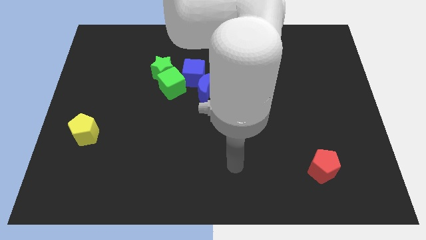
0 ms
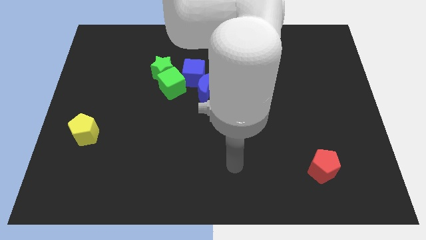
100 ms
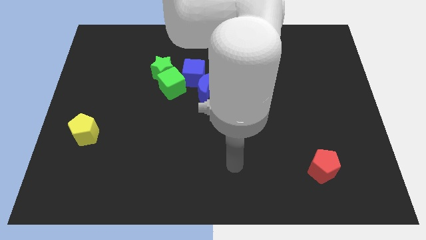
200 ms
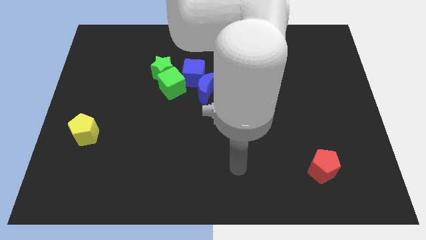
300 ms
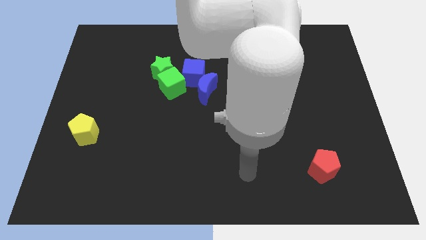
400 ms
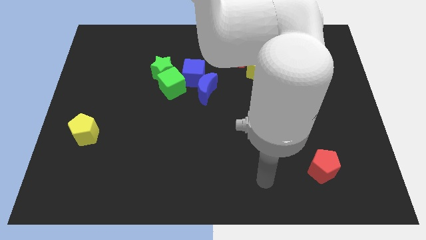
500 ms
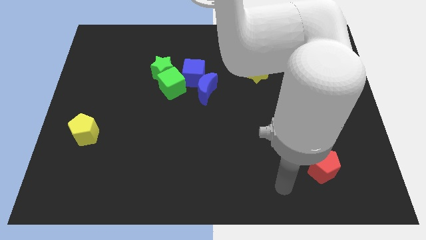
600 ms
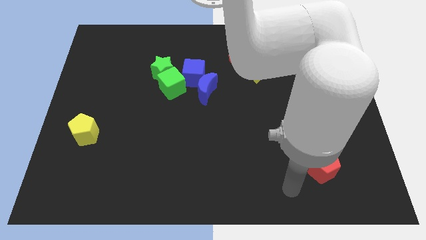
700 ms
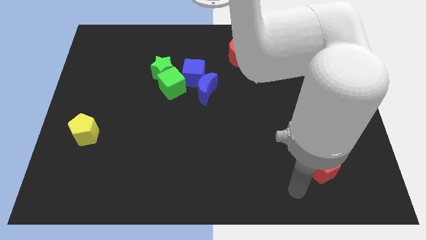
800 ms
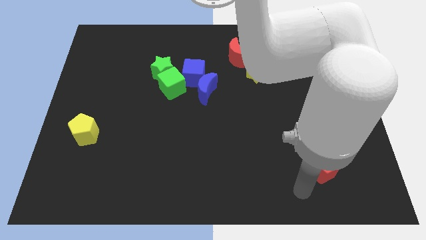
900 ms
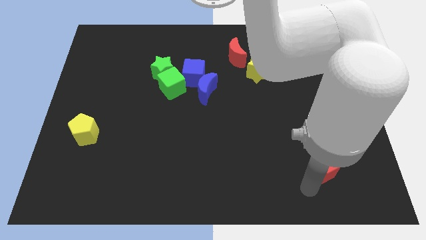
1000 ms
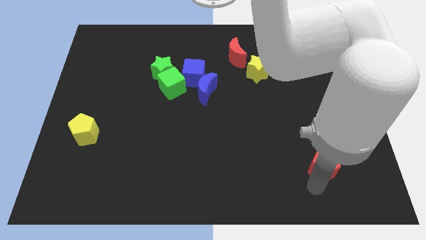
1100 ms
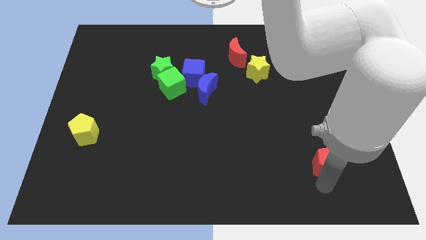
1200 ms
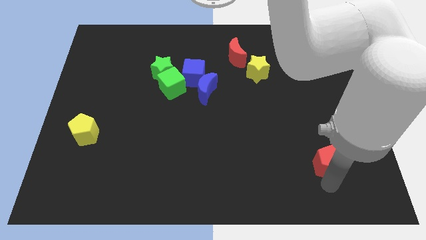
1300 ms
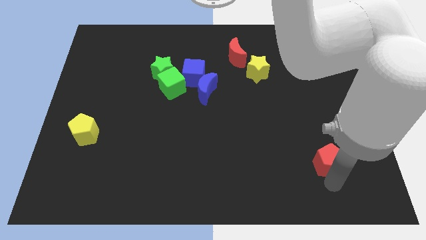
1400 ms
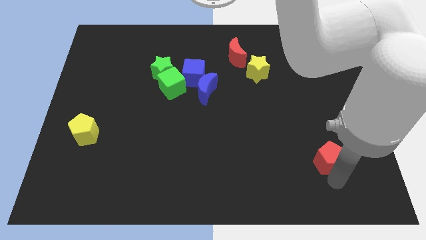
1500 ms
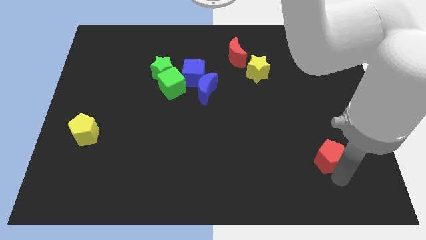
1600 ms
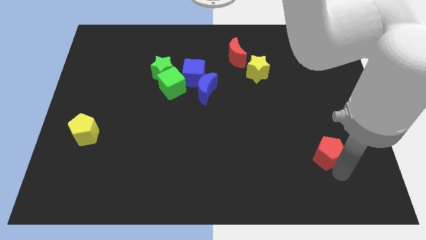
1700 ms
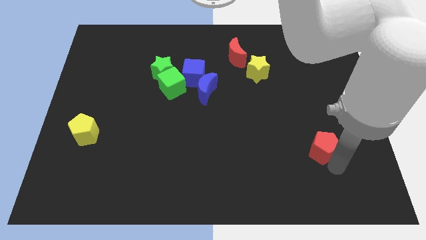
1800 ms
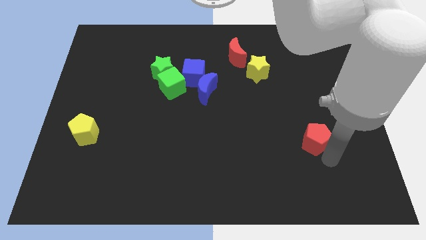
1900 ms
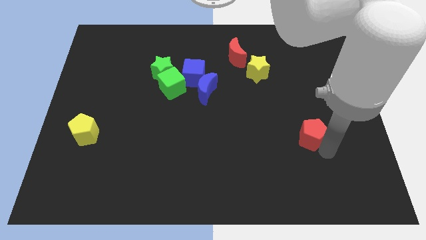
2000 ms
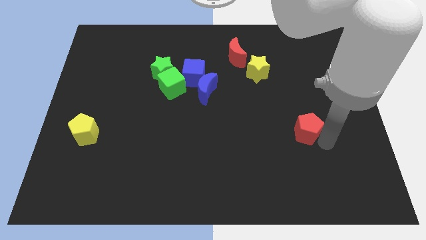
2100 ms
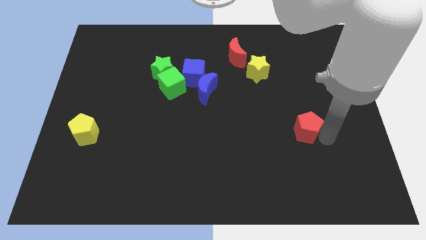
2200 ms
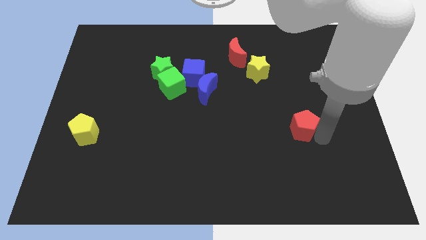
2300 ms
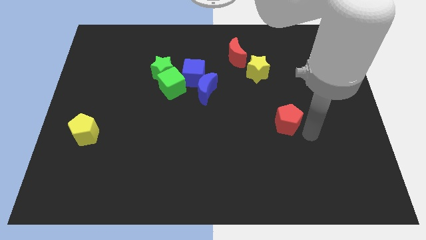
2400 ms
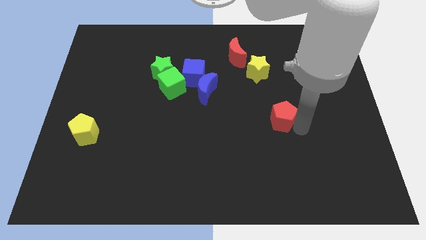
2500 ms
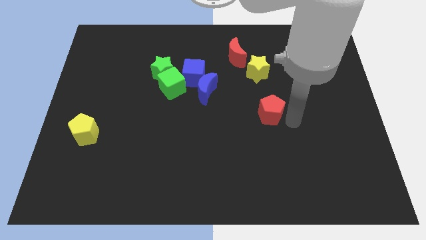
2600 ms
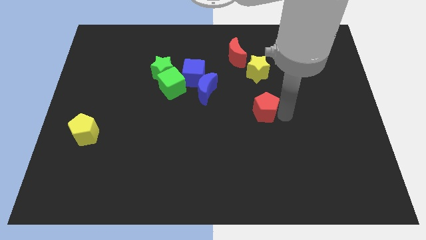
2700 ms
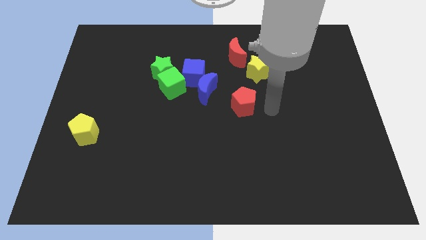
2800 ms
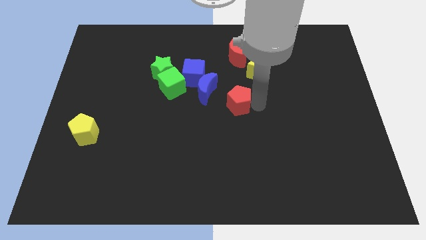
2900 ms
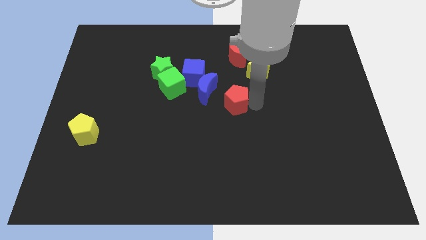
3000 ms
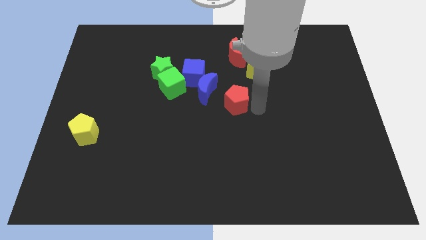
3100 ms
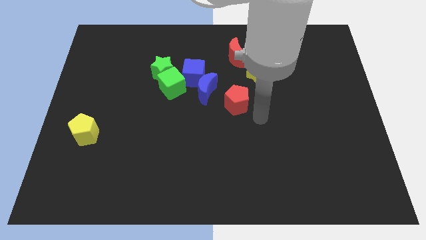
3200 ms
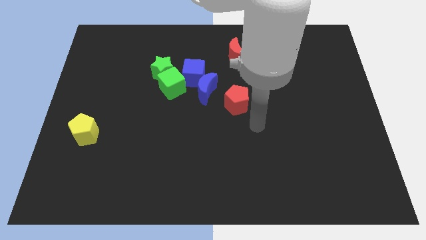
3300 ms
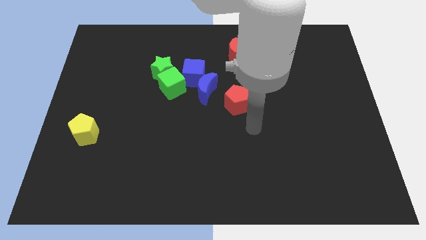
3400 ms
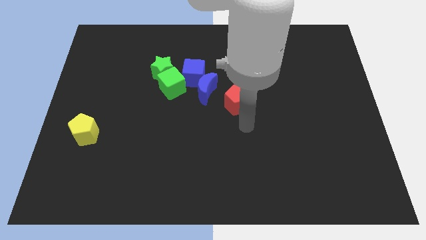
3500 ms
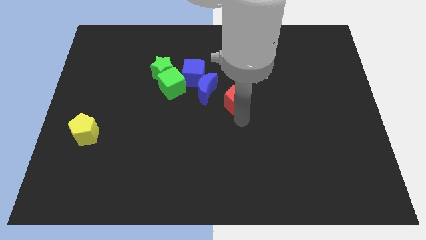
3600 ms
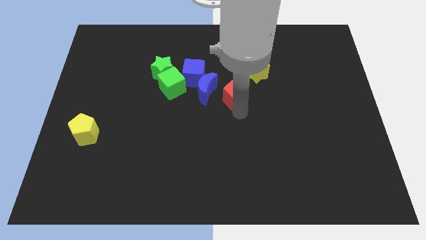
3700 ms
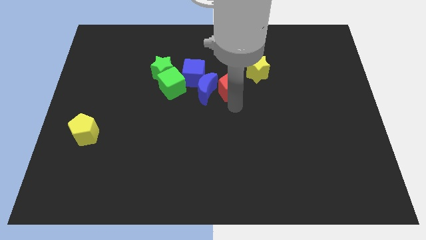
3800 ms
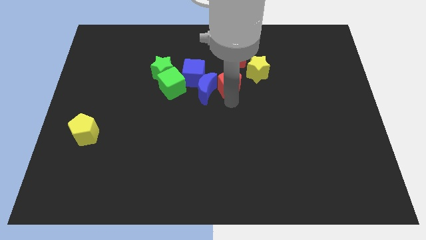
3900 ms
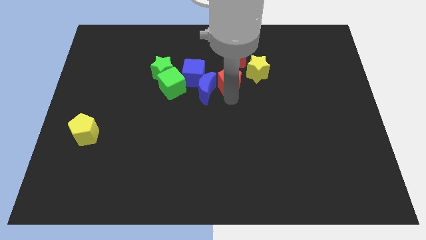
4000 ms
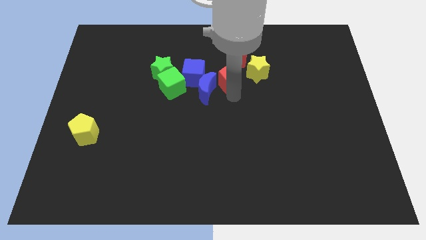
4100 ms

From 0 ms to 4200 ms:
move red pentagon into blue moon

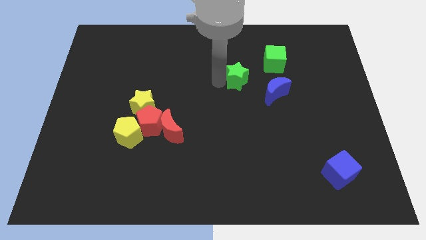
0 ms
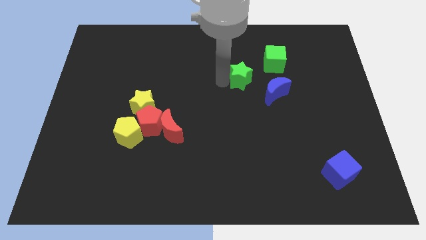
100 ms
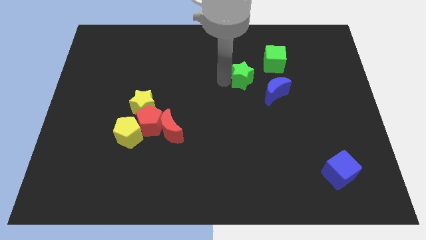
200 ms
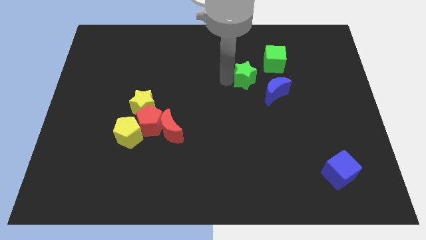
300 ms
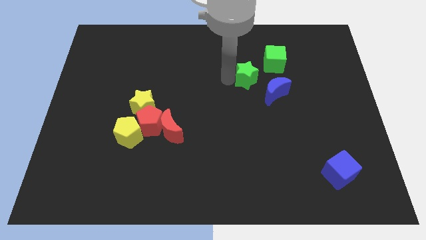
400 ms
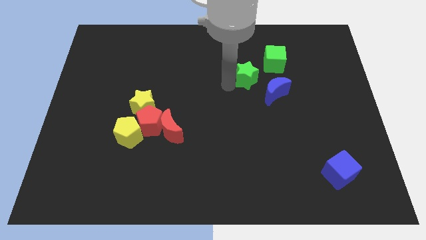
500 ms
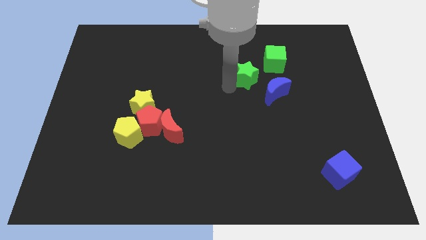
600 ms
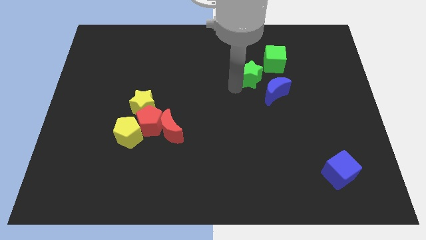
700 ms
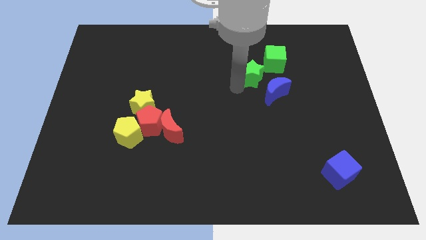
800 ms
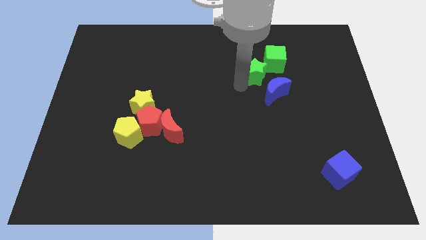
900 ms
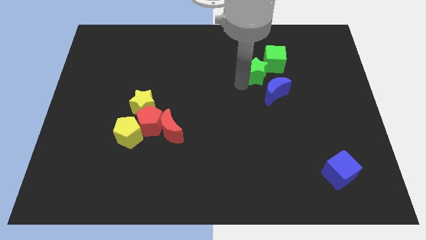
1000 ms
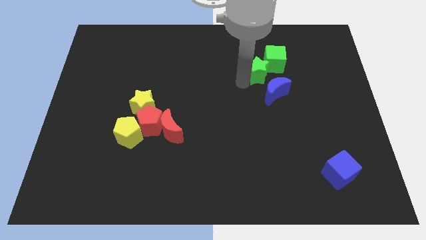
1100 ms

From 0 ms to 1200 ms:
push green star into the green cube

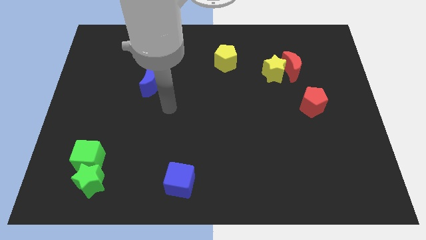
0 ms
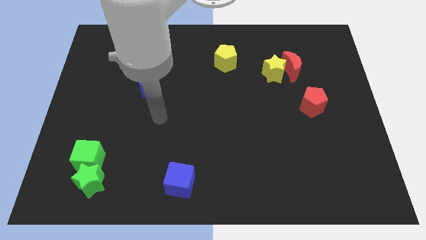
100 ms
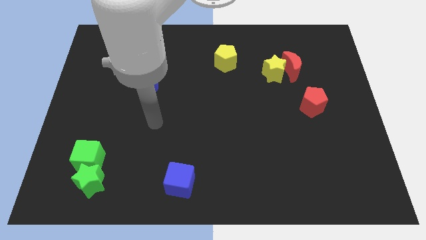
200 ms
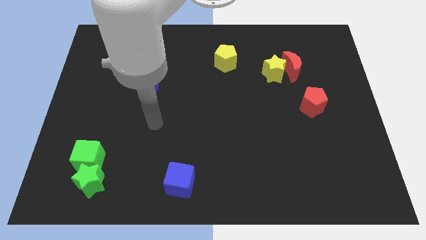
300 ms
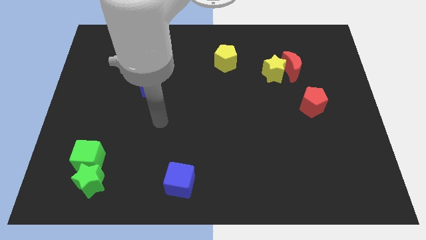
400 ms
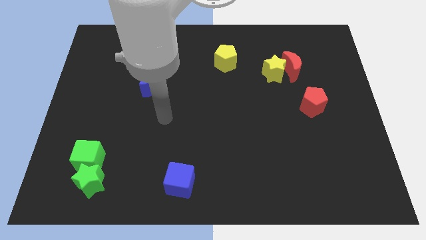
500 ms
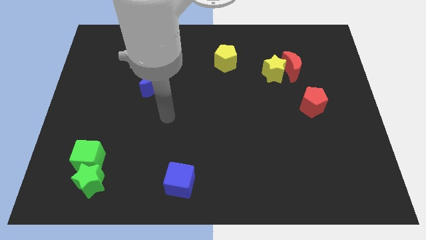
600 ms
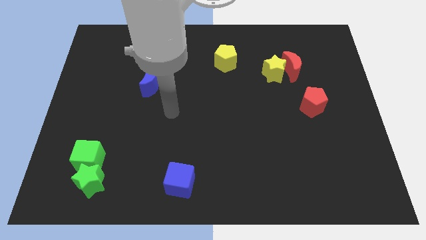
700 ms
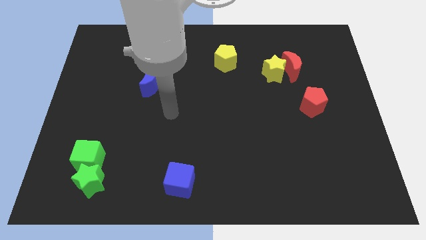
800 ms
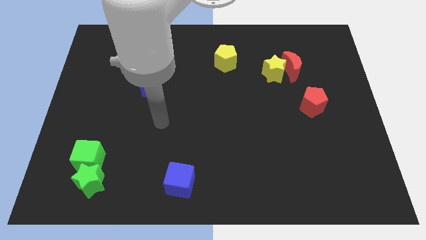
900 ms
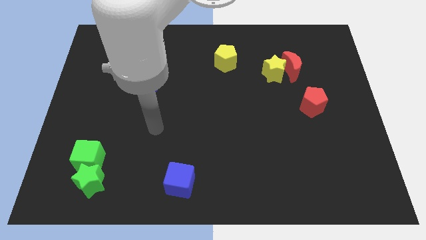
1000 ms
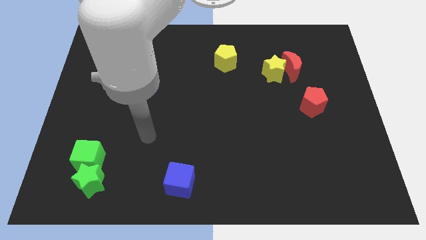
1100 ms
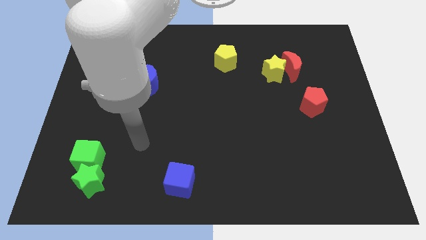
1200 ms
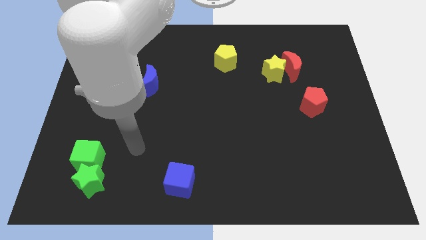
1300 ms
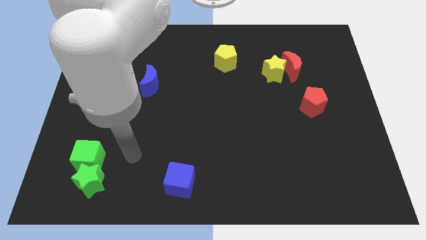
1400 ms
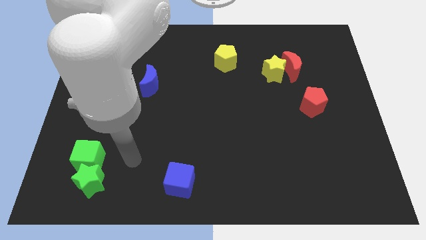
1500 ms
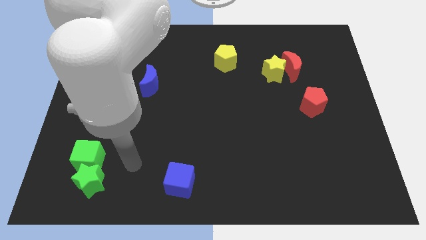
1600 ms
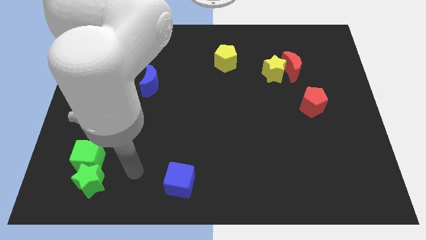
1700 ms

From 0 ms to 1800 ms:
place your arm in between the green cube and blue cube

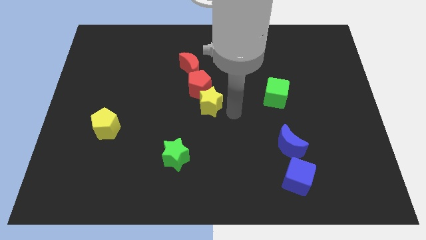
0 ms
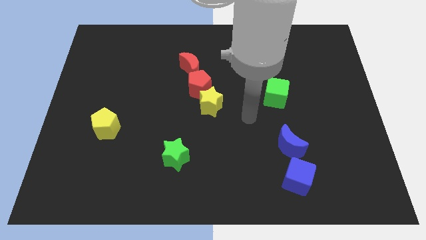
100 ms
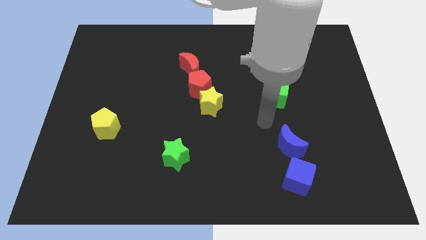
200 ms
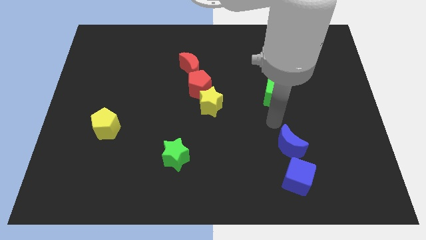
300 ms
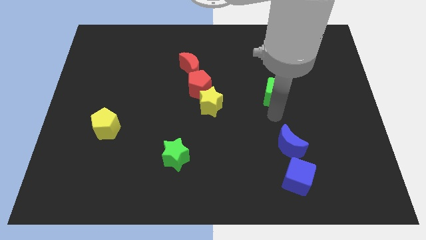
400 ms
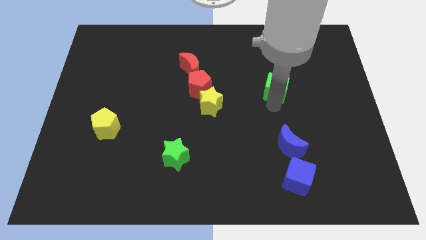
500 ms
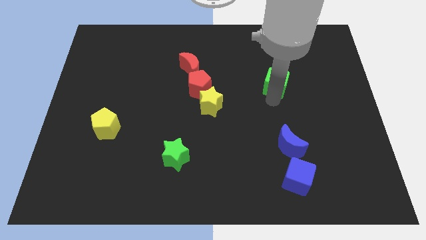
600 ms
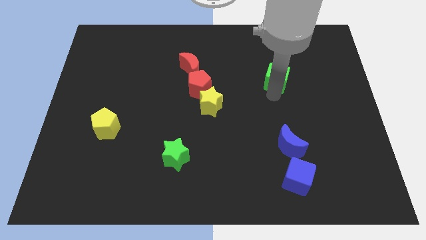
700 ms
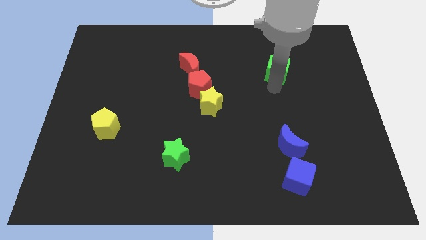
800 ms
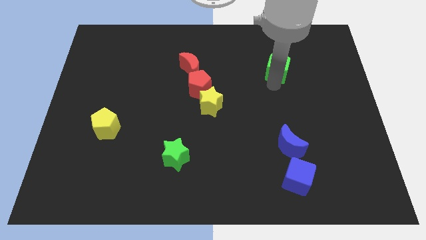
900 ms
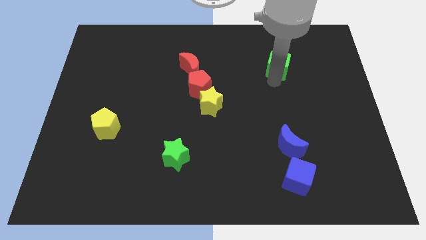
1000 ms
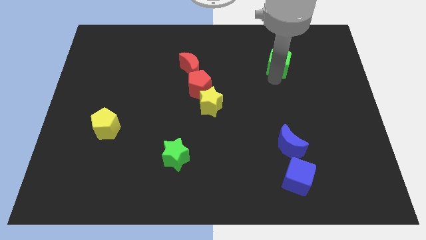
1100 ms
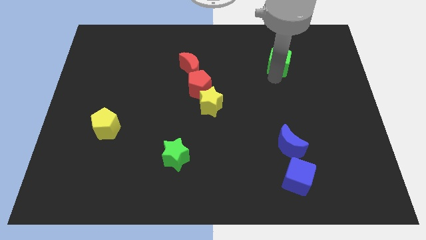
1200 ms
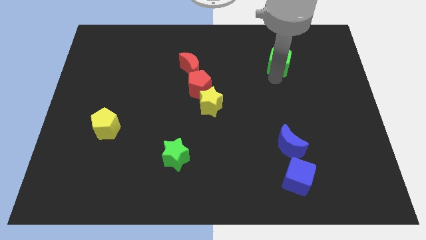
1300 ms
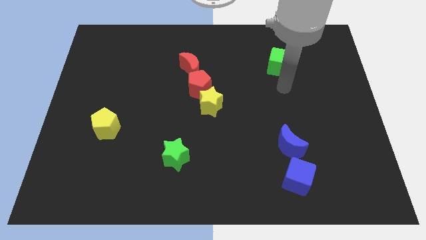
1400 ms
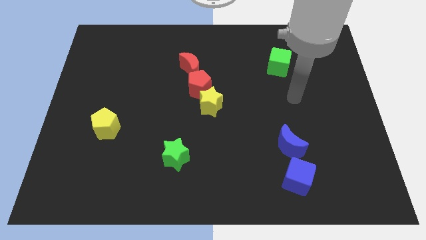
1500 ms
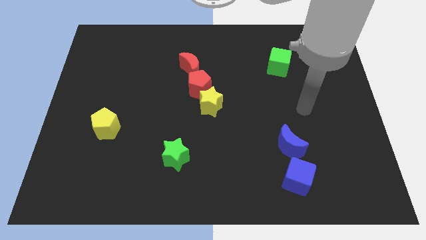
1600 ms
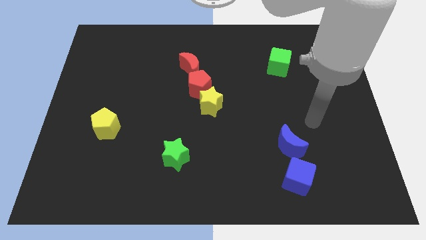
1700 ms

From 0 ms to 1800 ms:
place green cube to the horizontal to the red moon

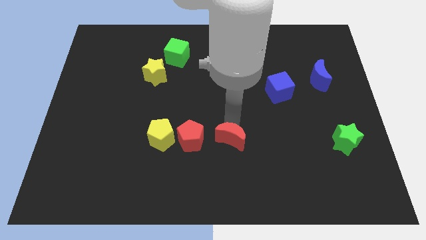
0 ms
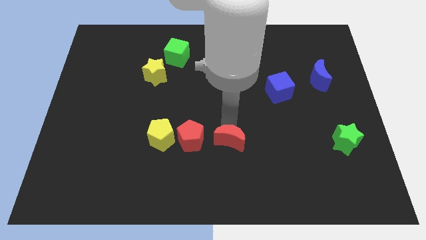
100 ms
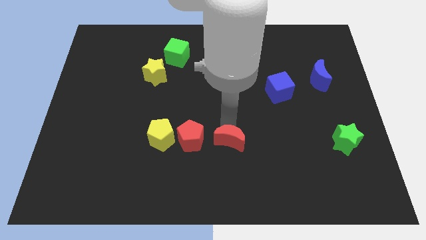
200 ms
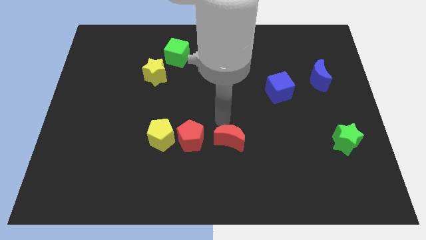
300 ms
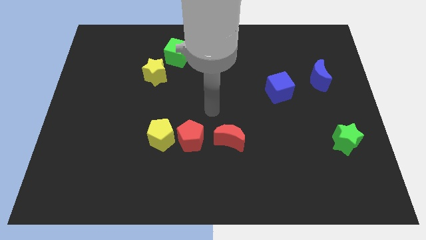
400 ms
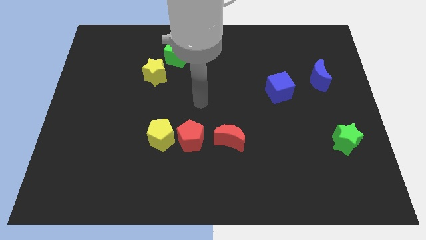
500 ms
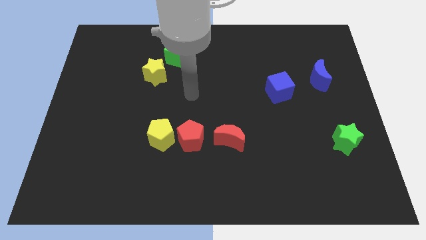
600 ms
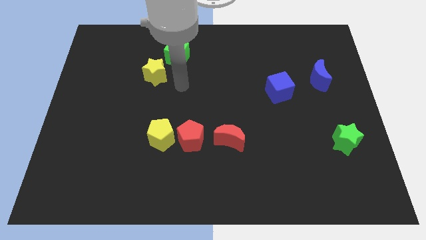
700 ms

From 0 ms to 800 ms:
place the arm below the green cube
